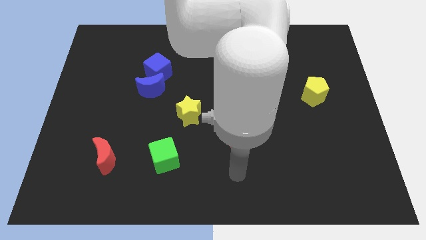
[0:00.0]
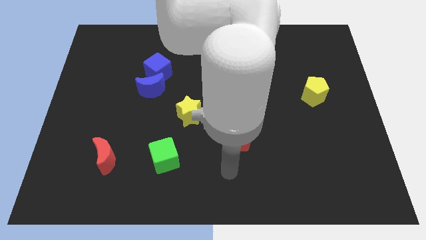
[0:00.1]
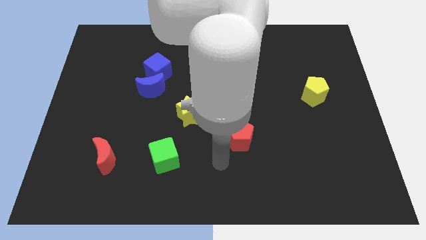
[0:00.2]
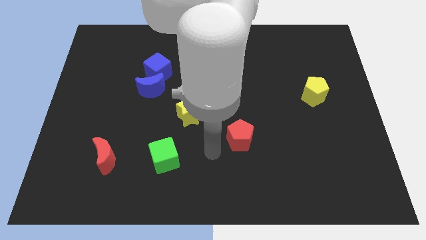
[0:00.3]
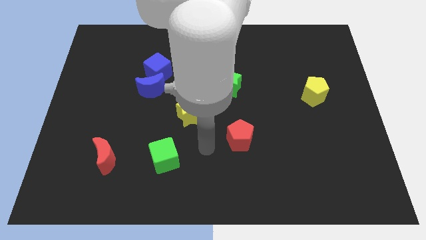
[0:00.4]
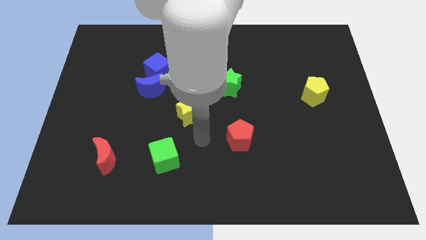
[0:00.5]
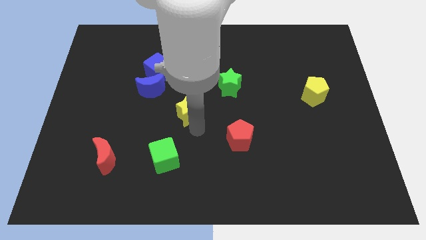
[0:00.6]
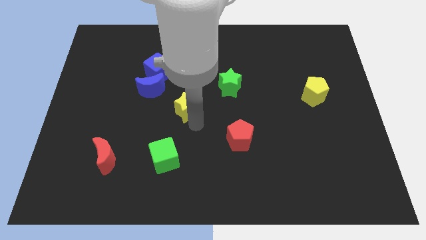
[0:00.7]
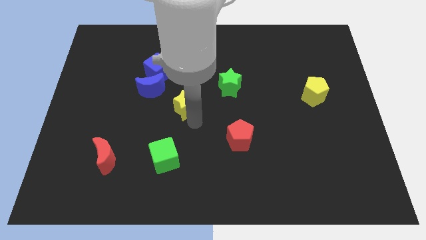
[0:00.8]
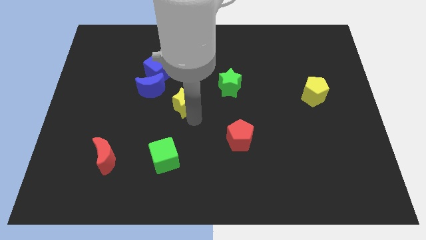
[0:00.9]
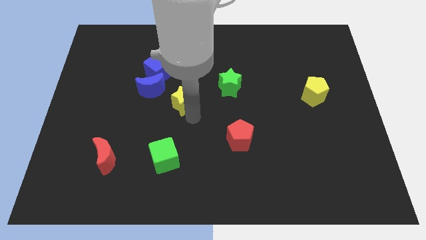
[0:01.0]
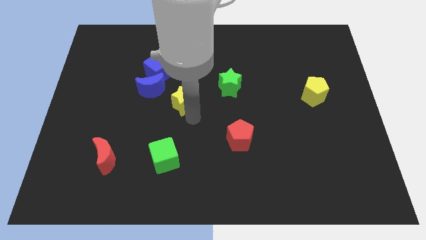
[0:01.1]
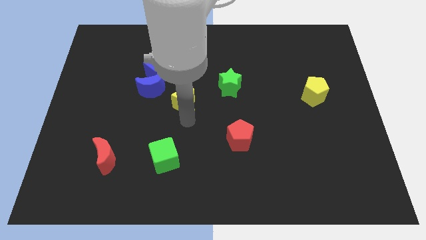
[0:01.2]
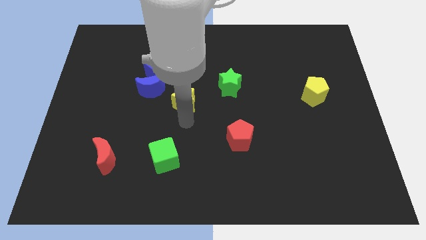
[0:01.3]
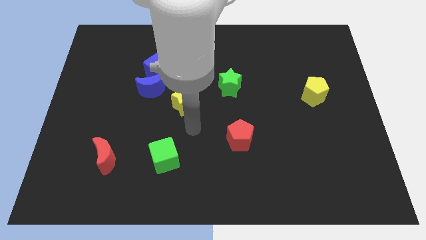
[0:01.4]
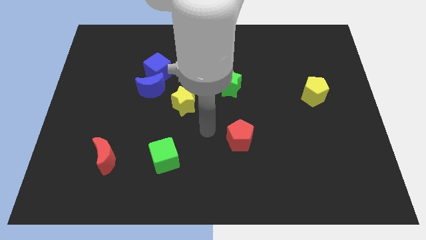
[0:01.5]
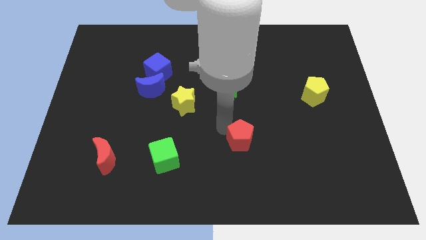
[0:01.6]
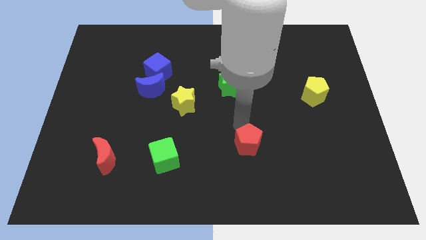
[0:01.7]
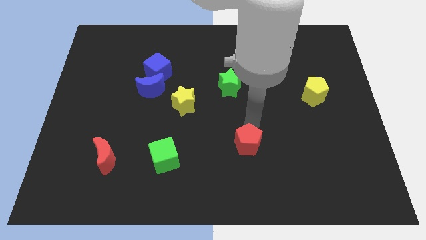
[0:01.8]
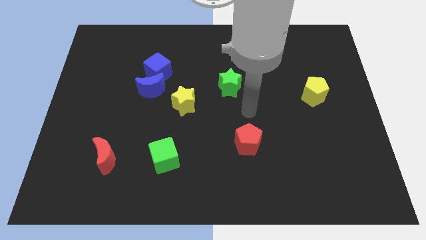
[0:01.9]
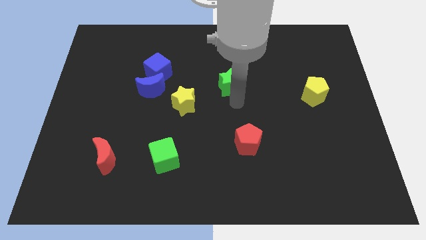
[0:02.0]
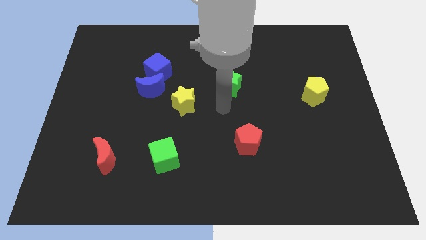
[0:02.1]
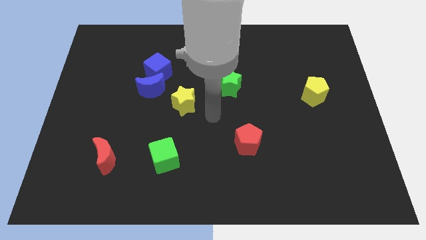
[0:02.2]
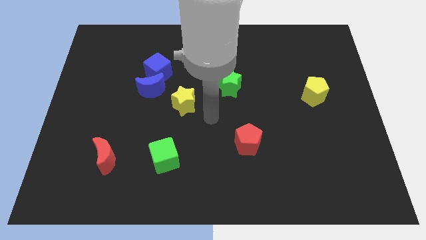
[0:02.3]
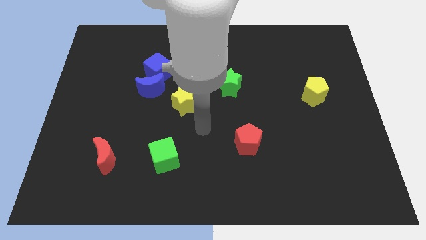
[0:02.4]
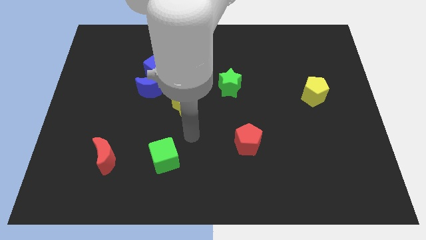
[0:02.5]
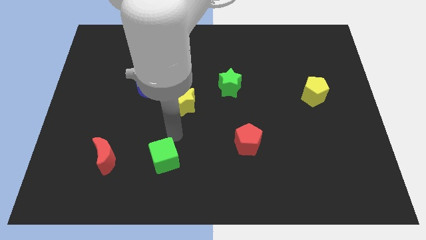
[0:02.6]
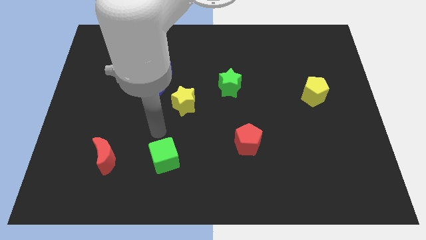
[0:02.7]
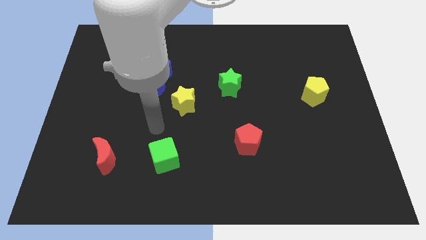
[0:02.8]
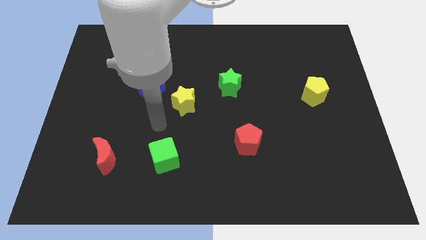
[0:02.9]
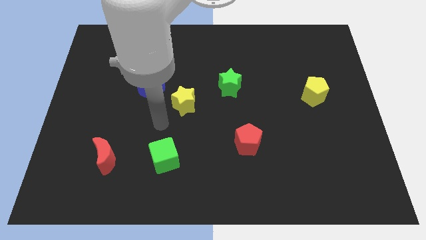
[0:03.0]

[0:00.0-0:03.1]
move the yellow star and red pentagon slightly in opposite direction

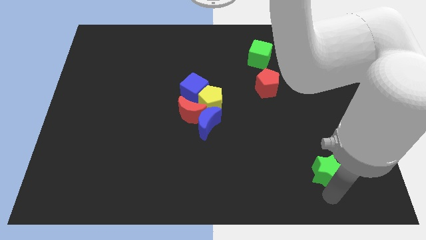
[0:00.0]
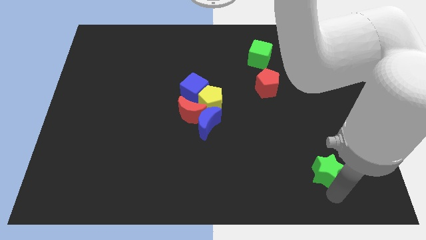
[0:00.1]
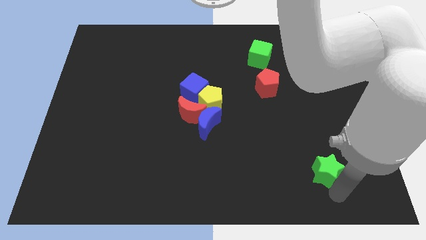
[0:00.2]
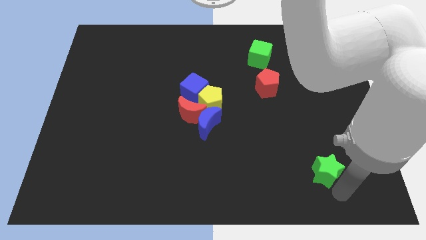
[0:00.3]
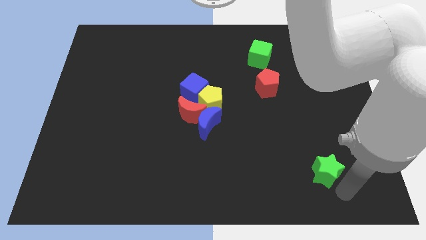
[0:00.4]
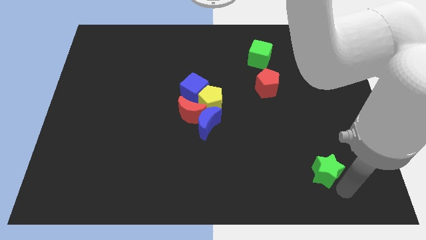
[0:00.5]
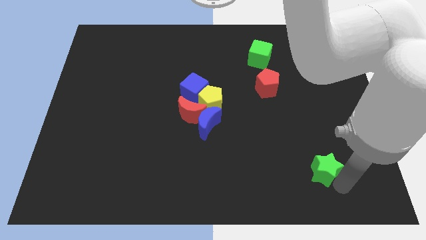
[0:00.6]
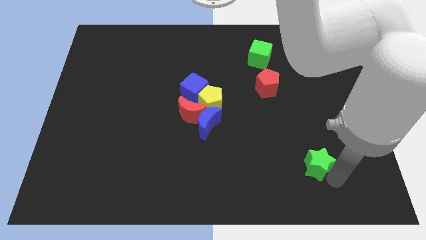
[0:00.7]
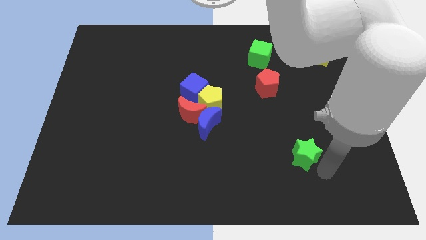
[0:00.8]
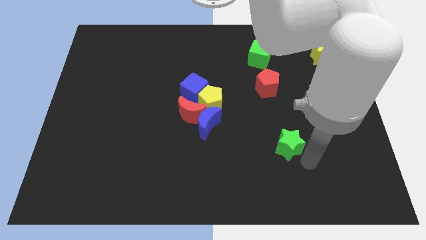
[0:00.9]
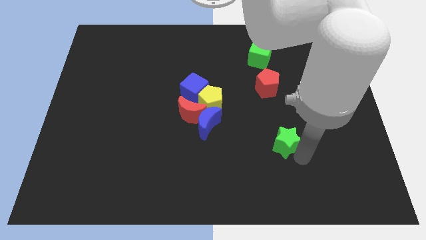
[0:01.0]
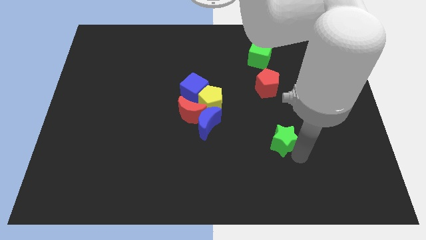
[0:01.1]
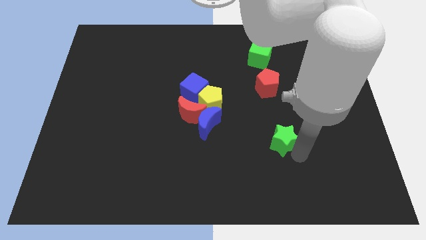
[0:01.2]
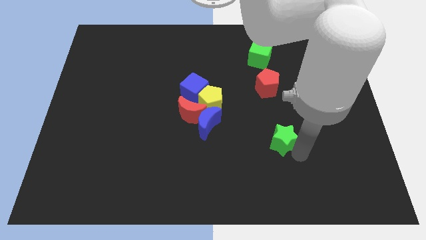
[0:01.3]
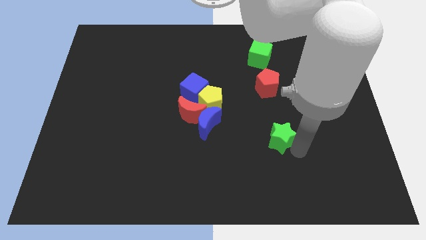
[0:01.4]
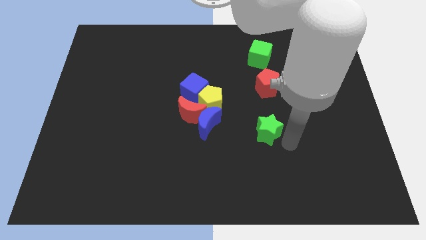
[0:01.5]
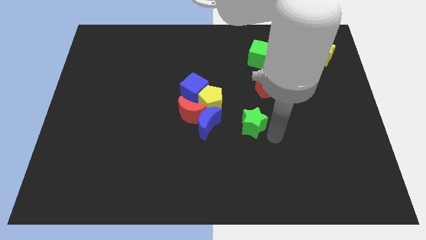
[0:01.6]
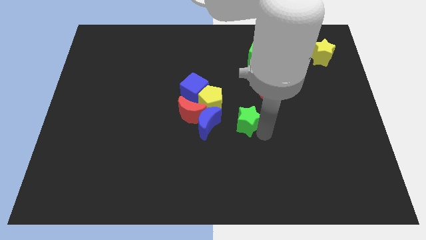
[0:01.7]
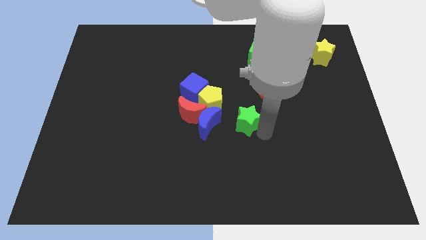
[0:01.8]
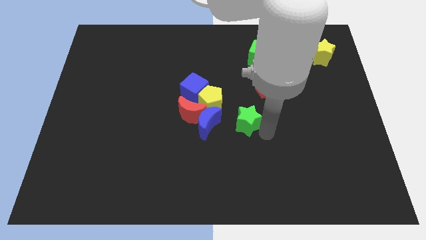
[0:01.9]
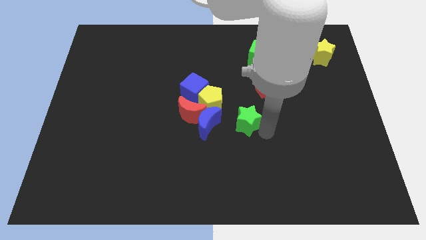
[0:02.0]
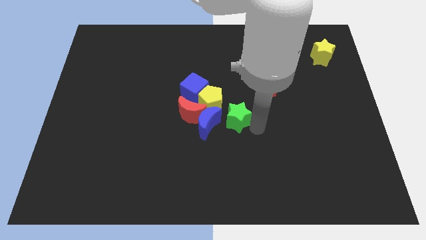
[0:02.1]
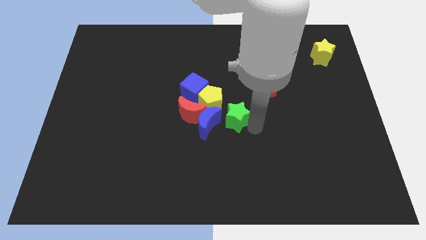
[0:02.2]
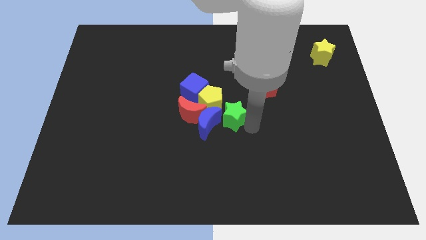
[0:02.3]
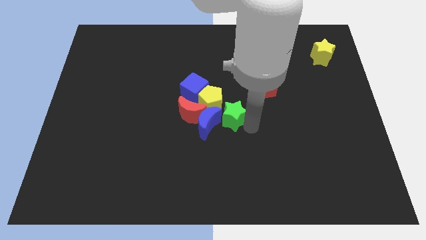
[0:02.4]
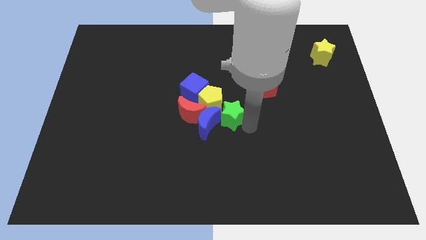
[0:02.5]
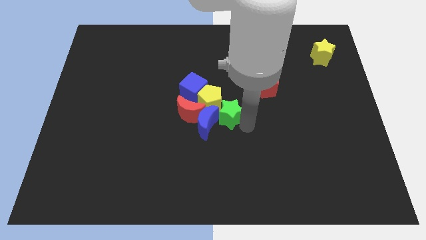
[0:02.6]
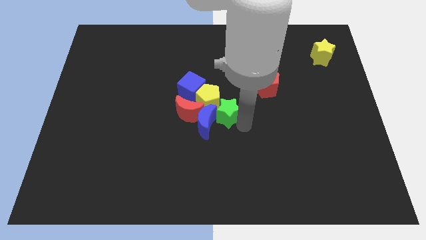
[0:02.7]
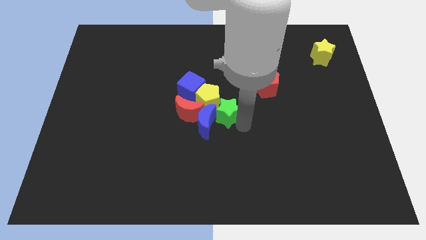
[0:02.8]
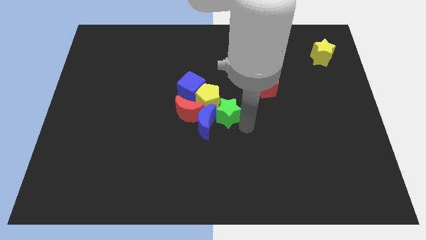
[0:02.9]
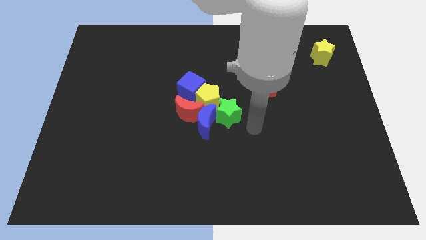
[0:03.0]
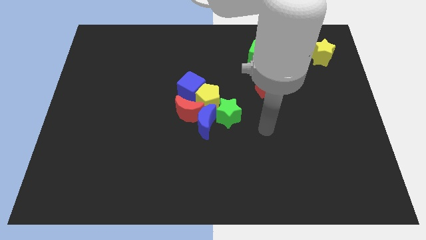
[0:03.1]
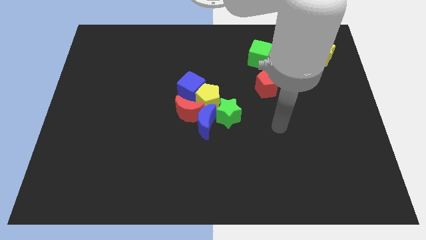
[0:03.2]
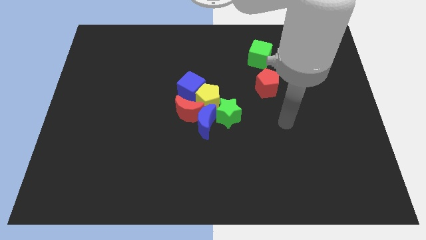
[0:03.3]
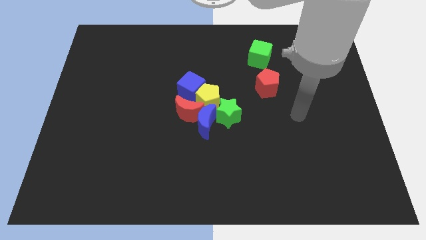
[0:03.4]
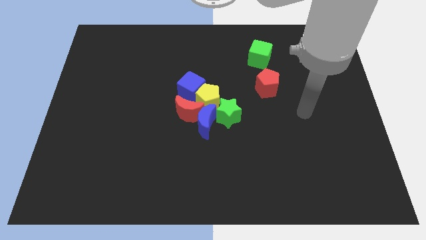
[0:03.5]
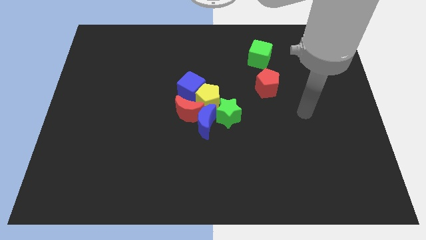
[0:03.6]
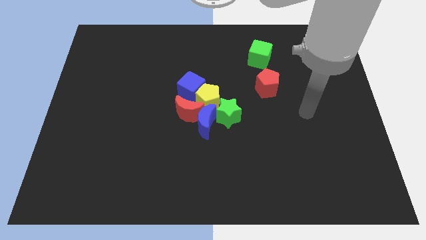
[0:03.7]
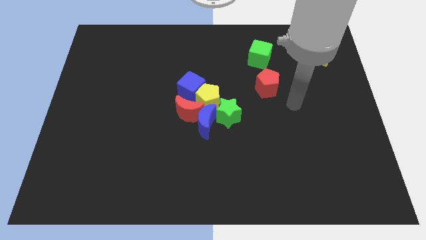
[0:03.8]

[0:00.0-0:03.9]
place the green star into the blue crescent

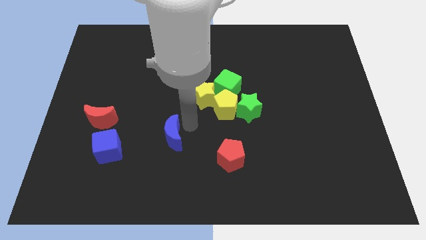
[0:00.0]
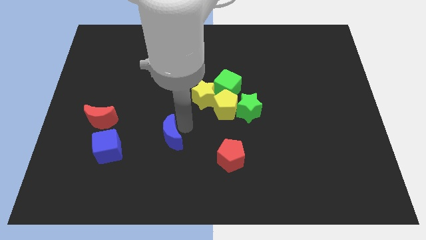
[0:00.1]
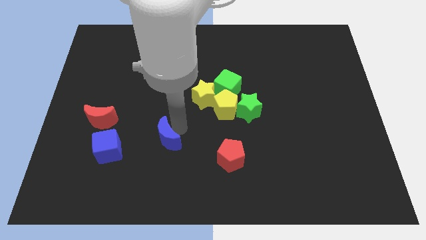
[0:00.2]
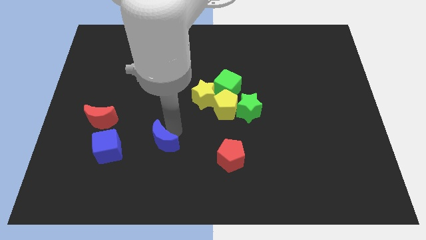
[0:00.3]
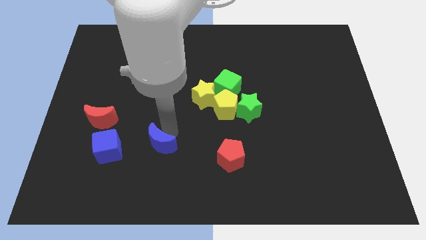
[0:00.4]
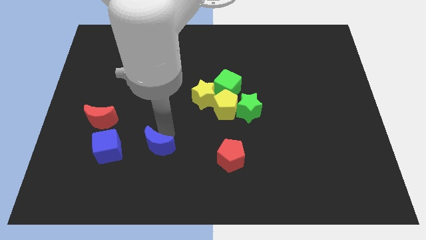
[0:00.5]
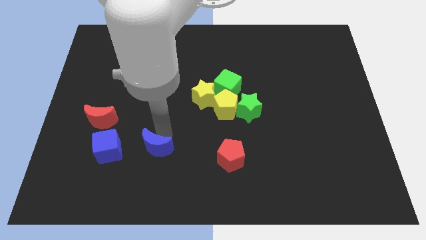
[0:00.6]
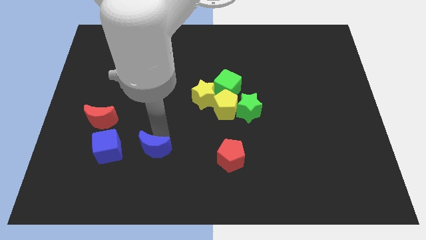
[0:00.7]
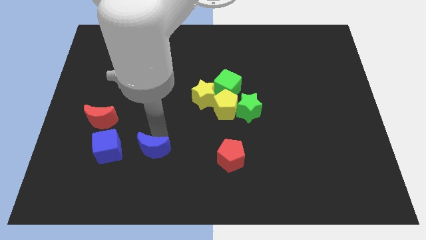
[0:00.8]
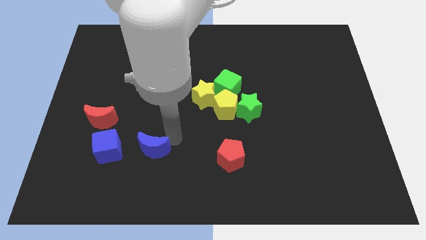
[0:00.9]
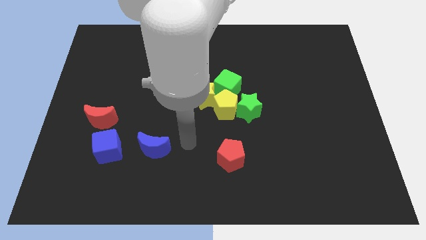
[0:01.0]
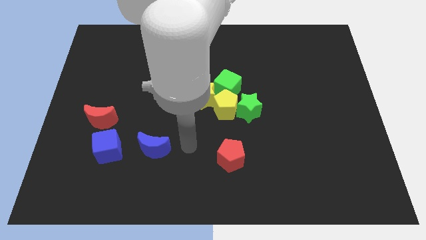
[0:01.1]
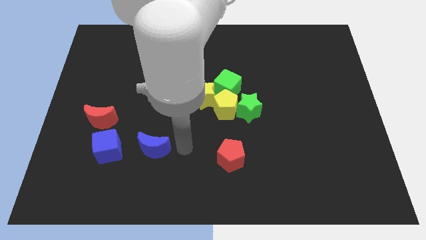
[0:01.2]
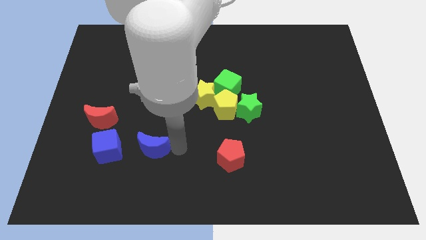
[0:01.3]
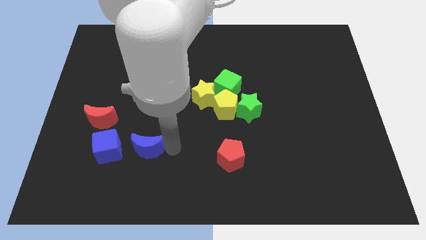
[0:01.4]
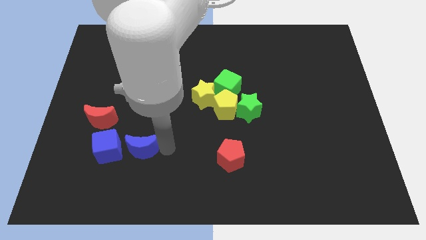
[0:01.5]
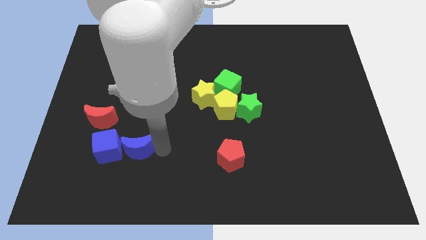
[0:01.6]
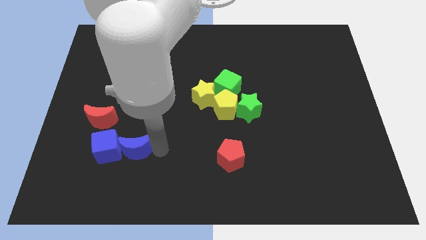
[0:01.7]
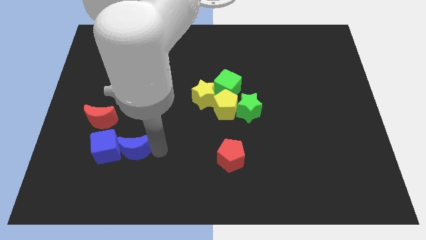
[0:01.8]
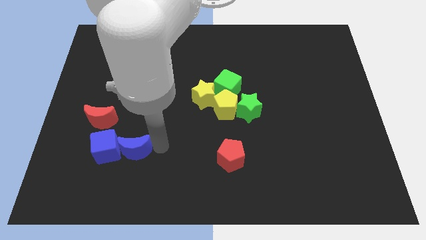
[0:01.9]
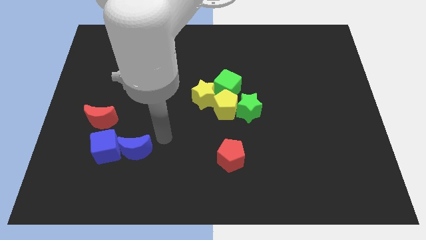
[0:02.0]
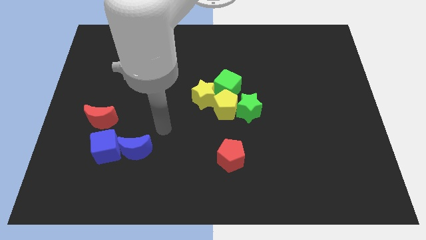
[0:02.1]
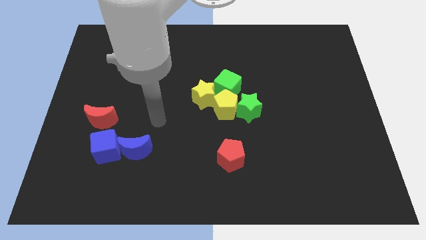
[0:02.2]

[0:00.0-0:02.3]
push the blue moon into the blue cube to the right
